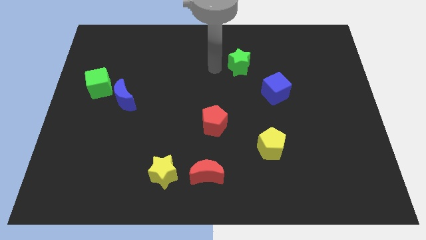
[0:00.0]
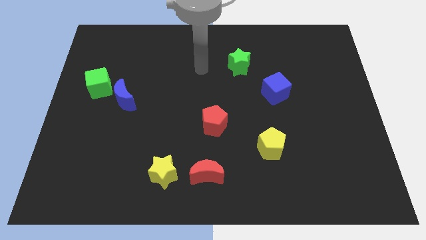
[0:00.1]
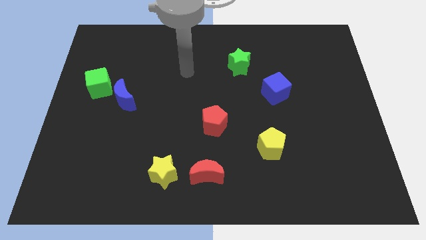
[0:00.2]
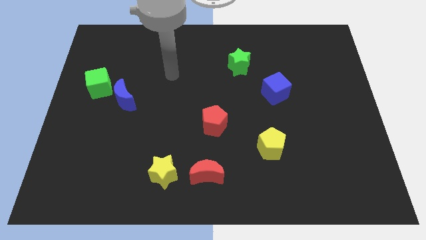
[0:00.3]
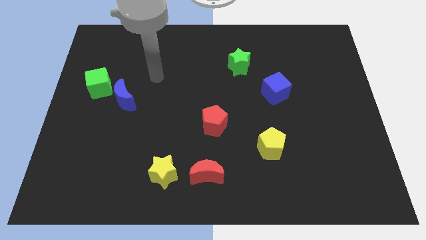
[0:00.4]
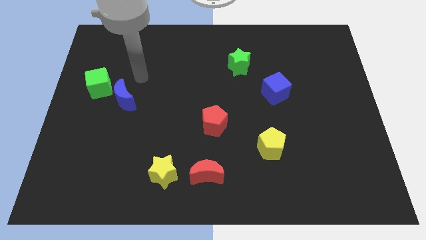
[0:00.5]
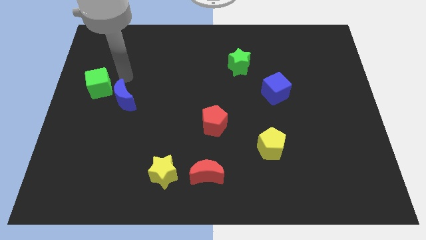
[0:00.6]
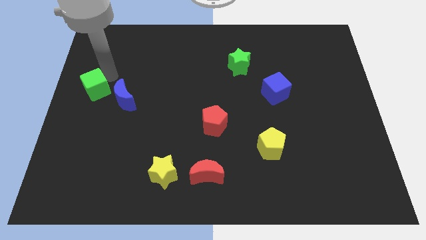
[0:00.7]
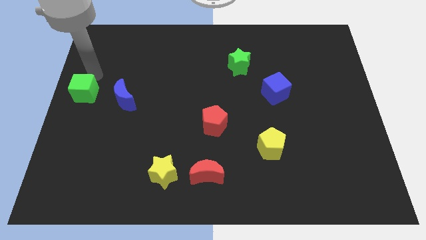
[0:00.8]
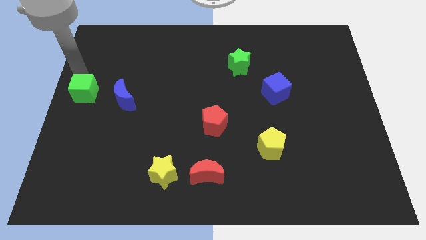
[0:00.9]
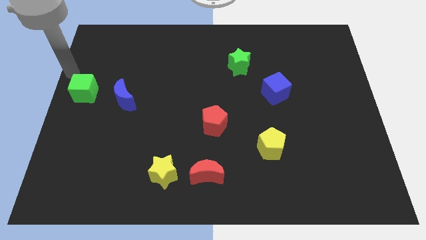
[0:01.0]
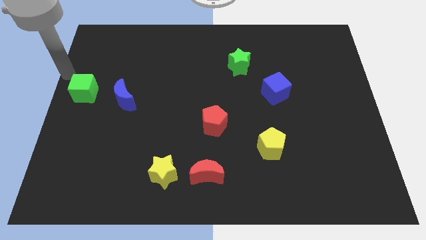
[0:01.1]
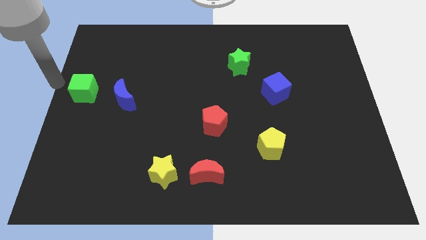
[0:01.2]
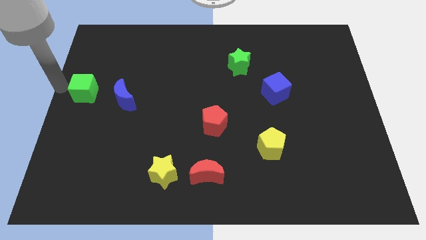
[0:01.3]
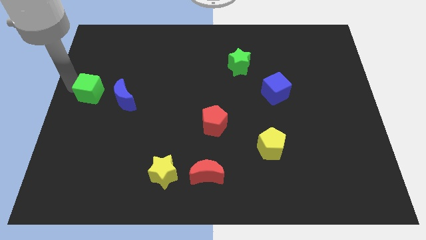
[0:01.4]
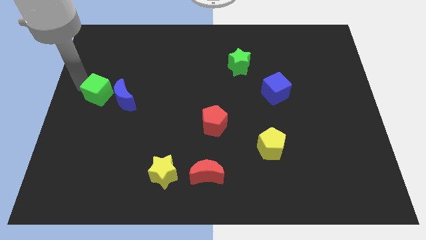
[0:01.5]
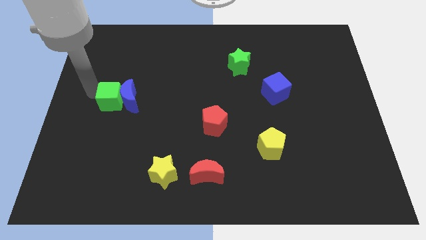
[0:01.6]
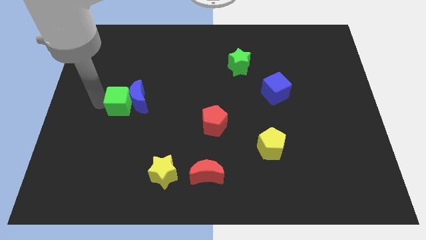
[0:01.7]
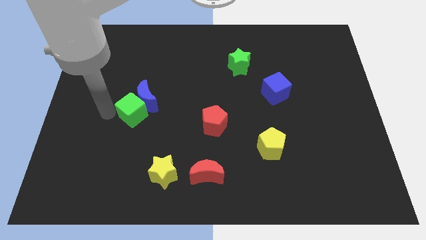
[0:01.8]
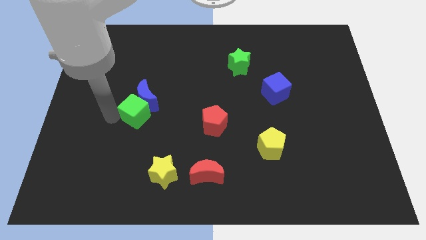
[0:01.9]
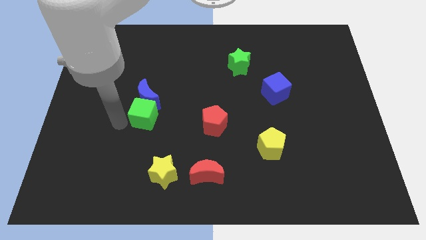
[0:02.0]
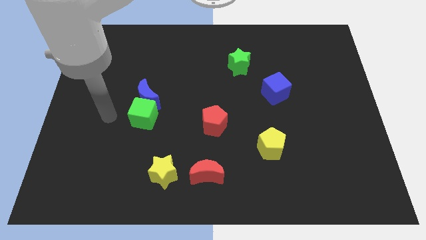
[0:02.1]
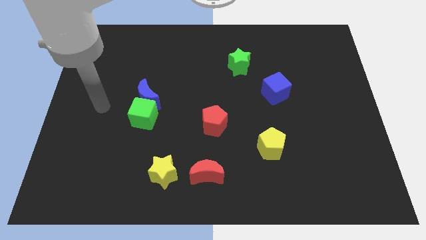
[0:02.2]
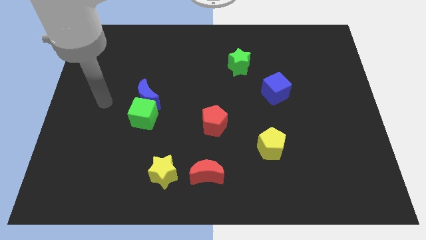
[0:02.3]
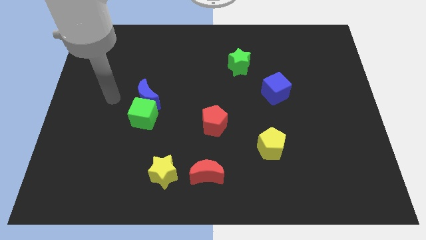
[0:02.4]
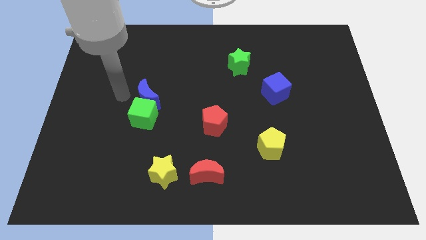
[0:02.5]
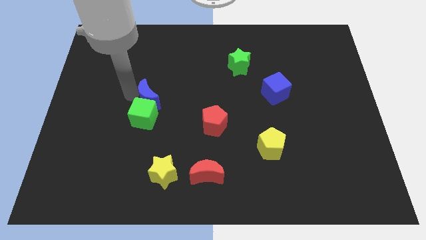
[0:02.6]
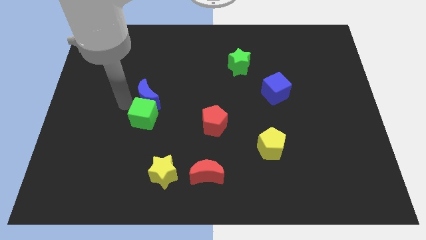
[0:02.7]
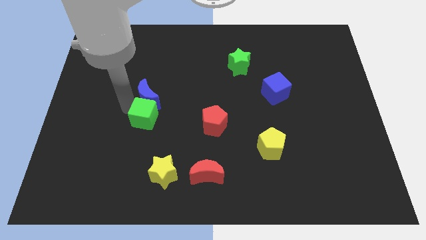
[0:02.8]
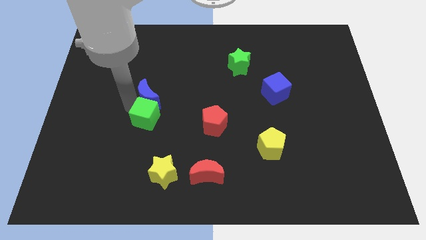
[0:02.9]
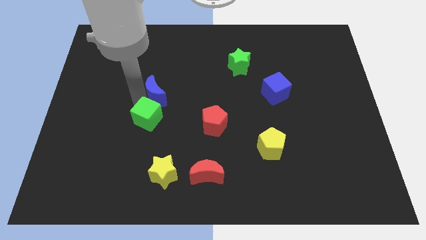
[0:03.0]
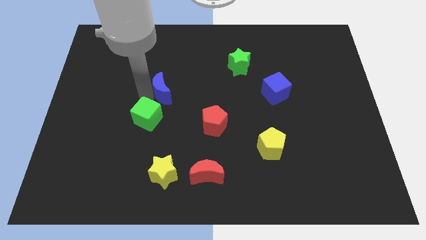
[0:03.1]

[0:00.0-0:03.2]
push the green cube into blue crescent

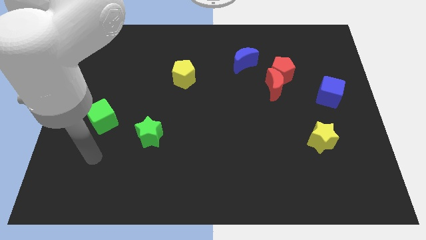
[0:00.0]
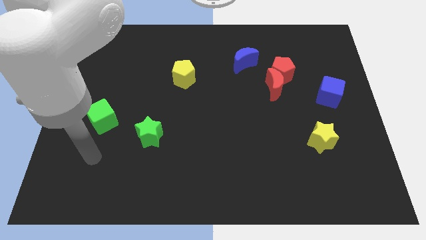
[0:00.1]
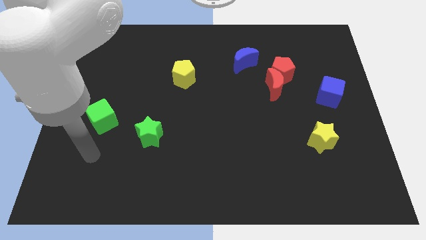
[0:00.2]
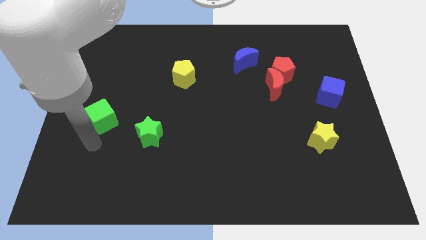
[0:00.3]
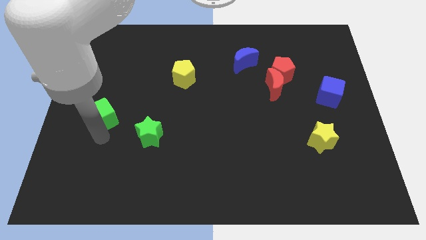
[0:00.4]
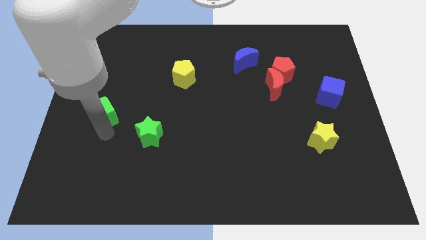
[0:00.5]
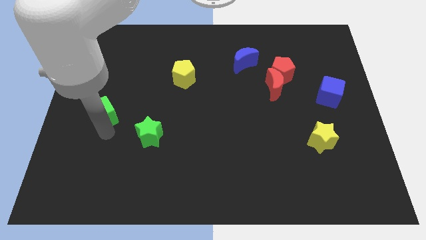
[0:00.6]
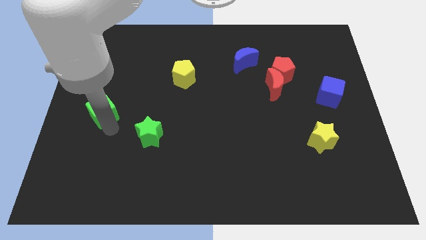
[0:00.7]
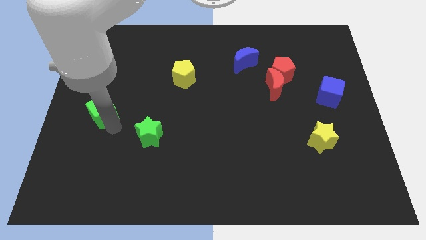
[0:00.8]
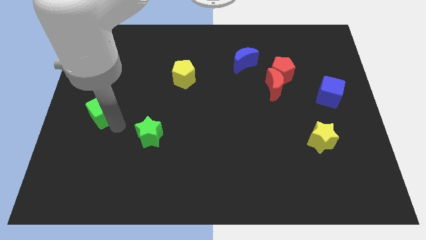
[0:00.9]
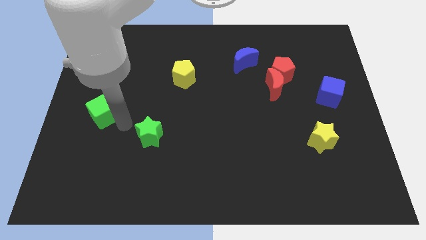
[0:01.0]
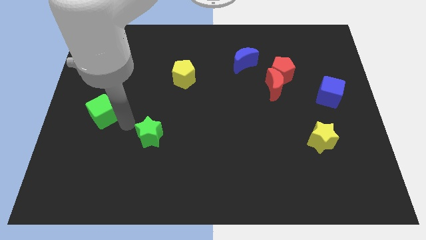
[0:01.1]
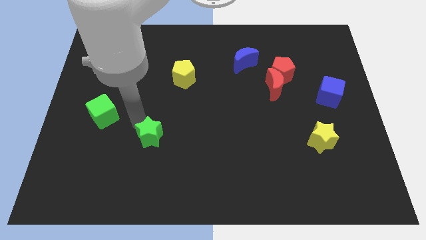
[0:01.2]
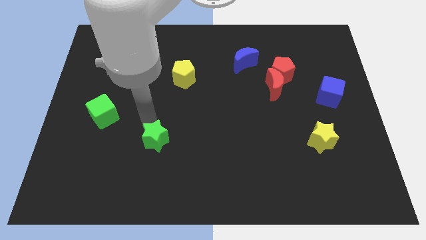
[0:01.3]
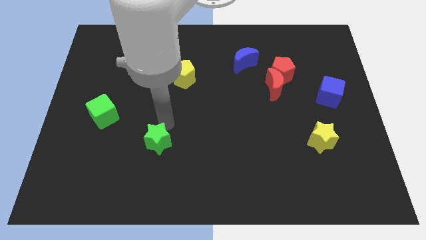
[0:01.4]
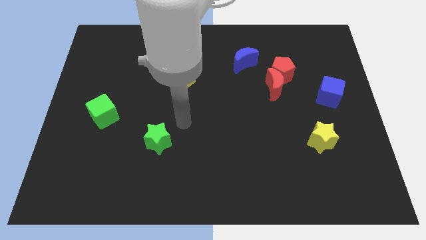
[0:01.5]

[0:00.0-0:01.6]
tap the green star

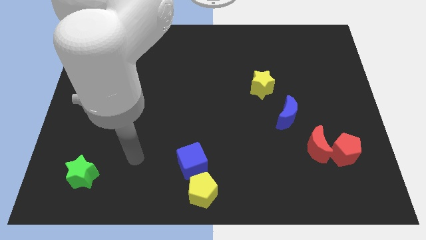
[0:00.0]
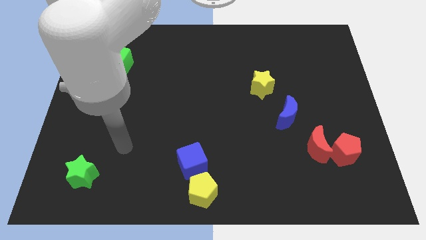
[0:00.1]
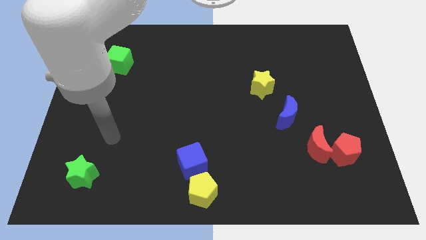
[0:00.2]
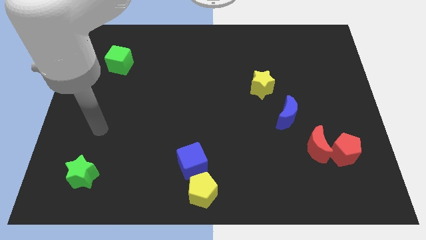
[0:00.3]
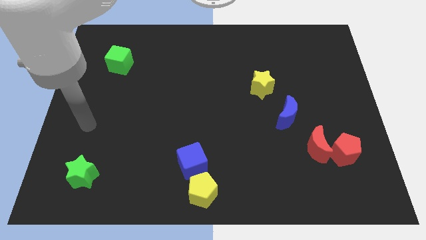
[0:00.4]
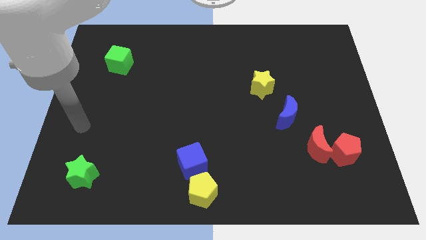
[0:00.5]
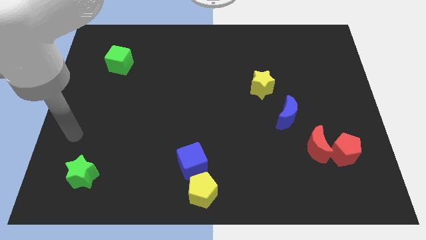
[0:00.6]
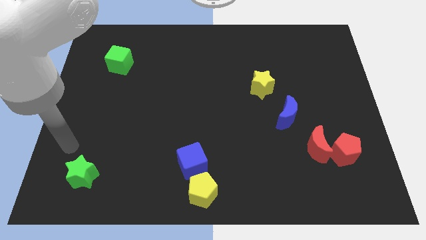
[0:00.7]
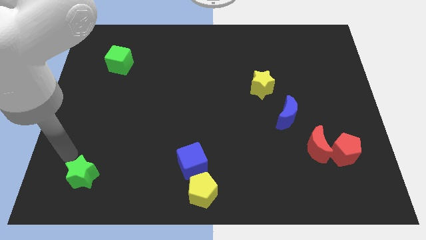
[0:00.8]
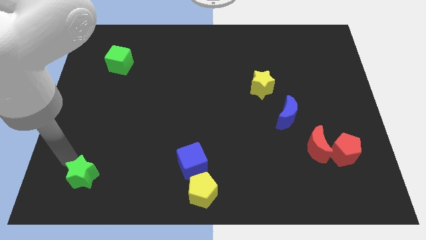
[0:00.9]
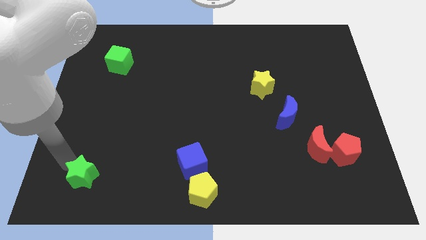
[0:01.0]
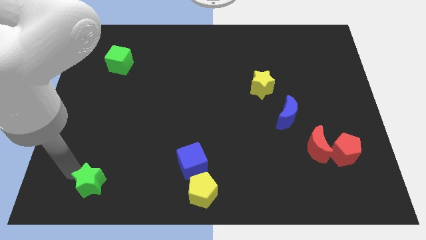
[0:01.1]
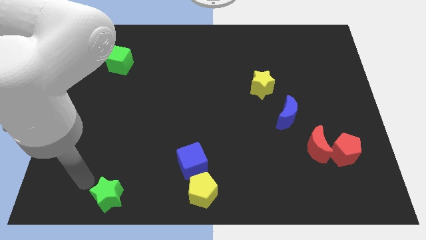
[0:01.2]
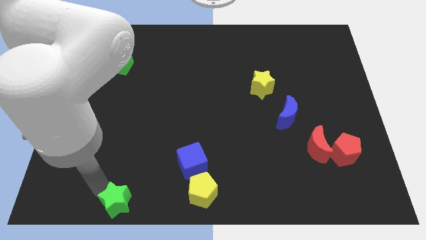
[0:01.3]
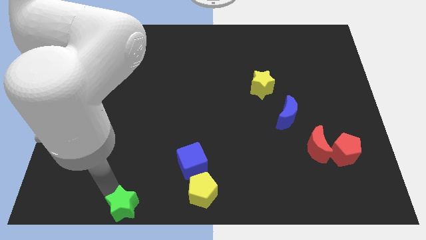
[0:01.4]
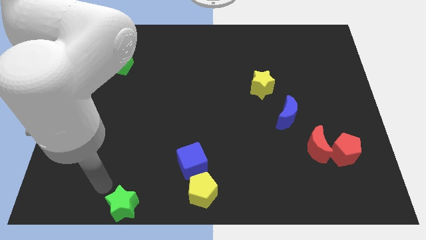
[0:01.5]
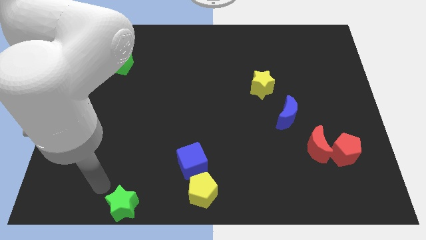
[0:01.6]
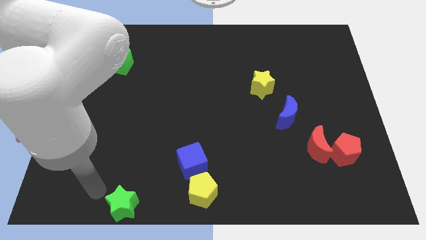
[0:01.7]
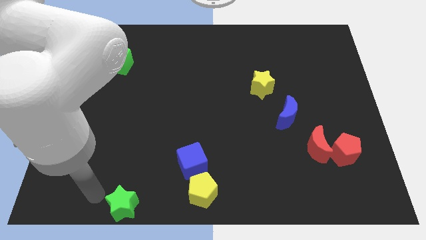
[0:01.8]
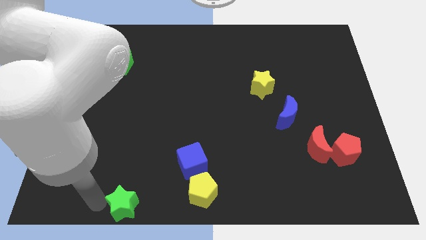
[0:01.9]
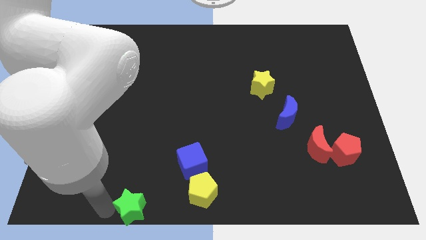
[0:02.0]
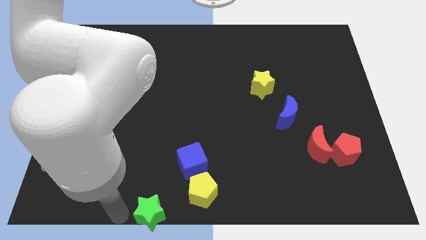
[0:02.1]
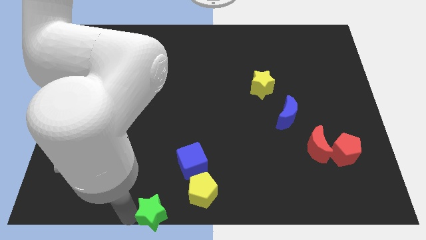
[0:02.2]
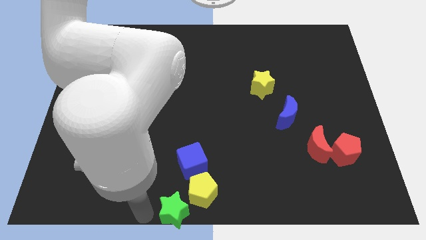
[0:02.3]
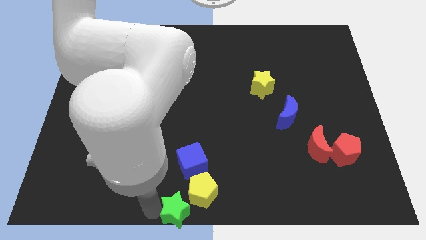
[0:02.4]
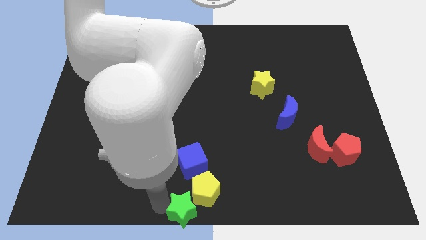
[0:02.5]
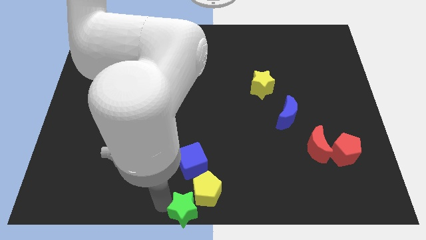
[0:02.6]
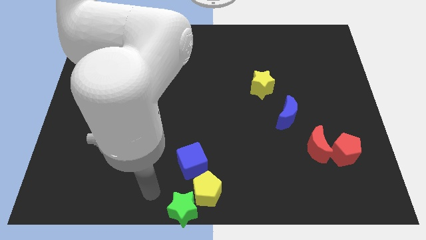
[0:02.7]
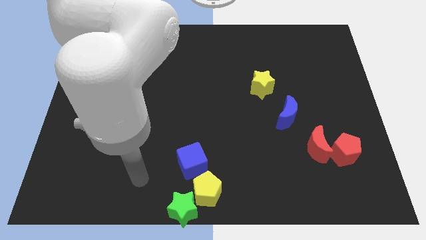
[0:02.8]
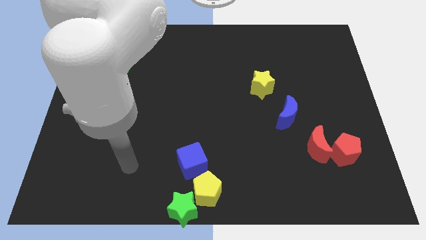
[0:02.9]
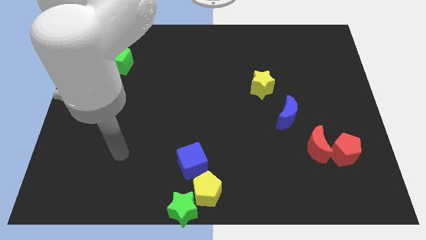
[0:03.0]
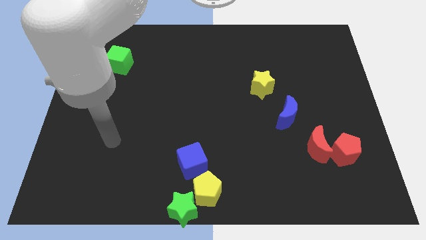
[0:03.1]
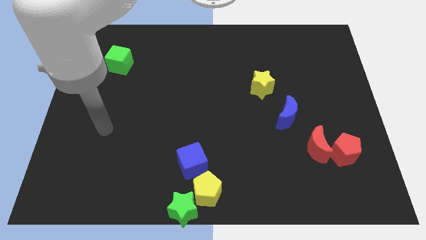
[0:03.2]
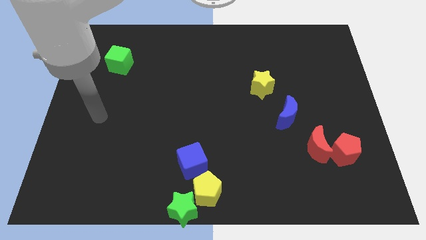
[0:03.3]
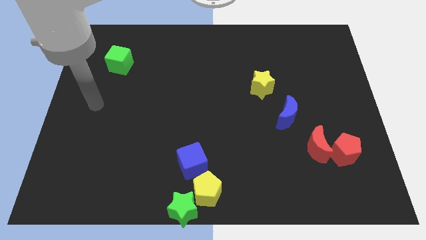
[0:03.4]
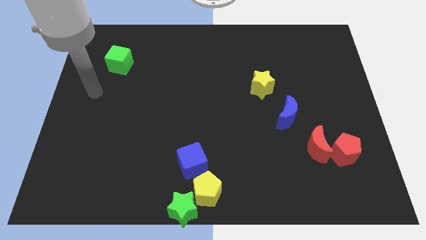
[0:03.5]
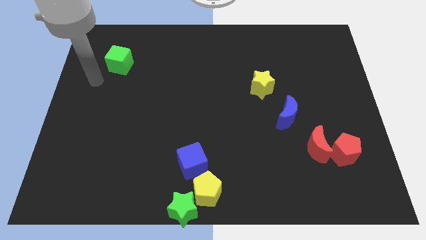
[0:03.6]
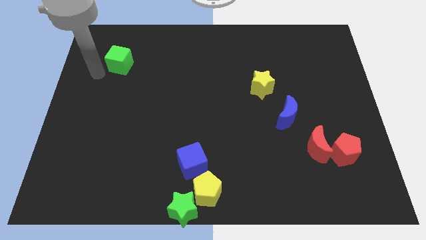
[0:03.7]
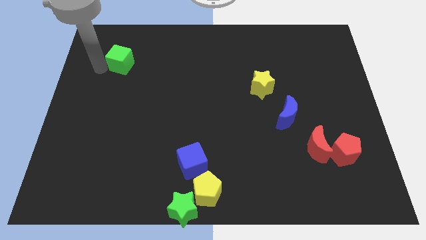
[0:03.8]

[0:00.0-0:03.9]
push the green star towards the yellow pentagon

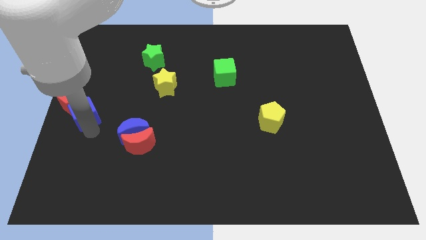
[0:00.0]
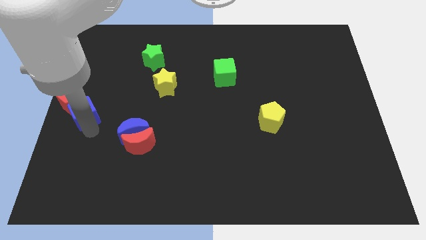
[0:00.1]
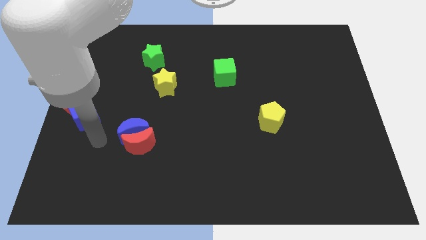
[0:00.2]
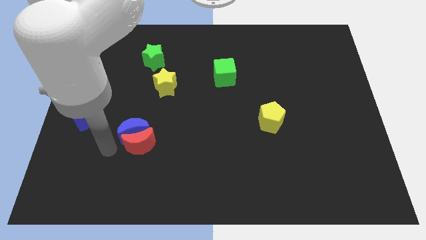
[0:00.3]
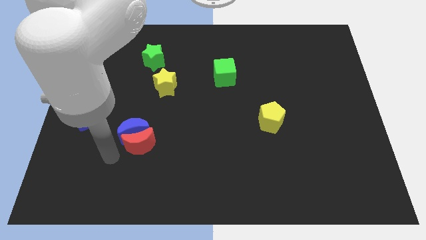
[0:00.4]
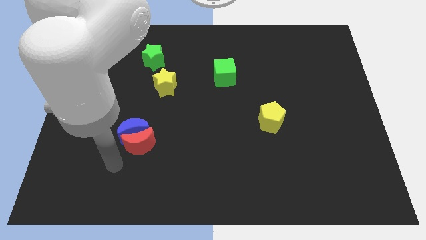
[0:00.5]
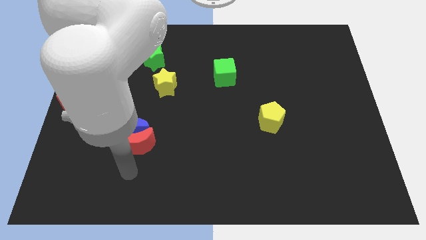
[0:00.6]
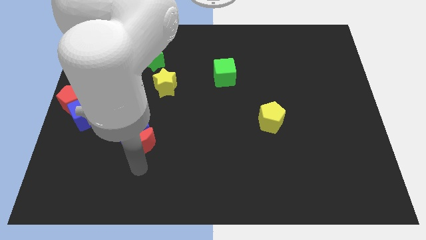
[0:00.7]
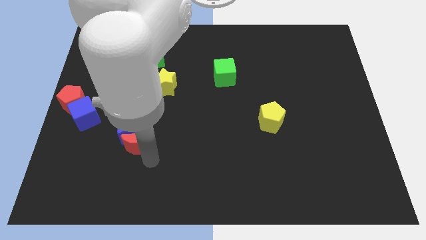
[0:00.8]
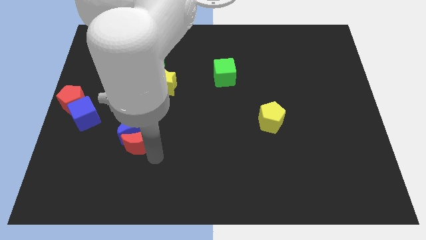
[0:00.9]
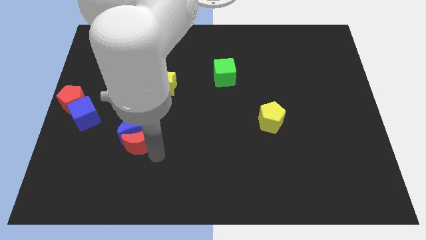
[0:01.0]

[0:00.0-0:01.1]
move away from blue cube to the bottom side of the red moon
